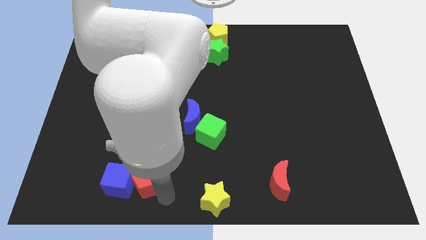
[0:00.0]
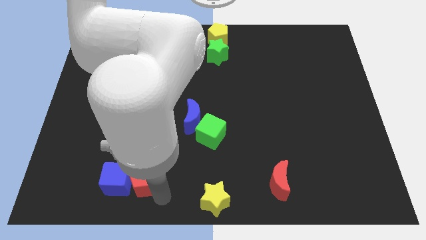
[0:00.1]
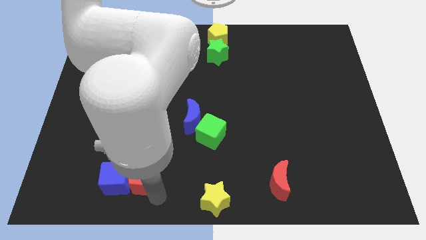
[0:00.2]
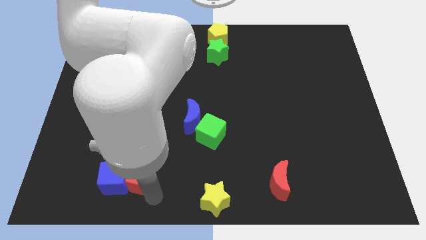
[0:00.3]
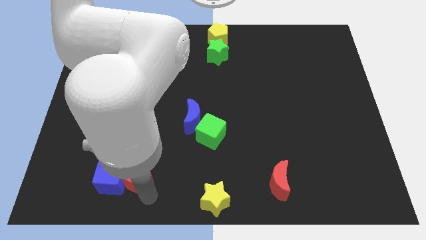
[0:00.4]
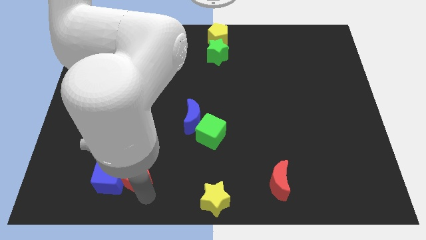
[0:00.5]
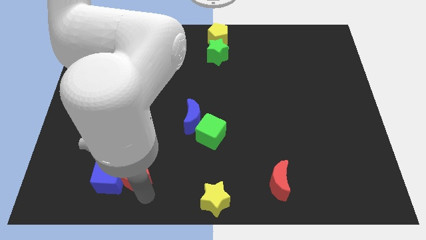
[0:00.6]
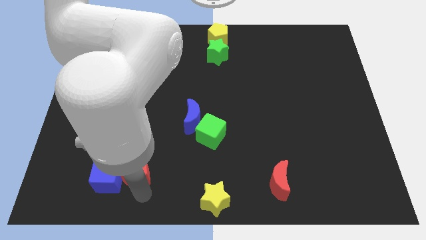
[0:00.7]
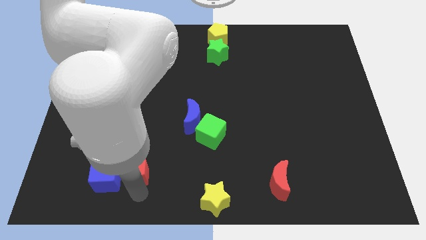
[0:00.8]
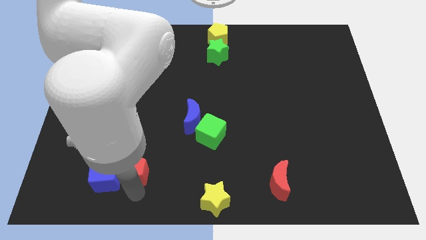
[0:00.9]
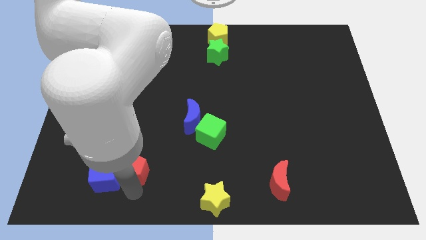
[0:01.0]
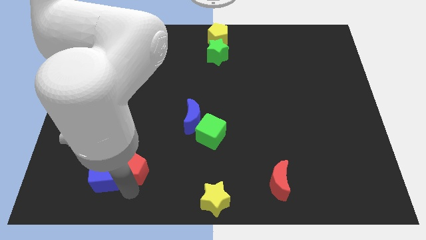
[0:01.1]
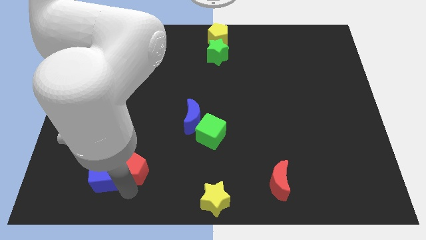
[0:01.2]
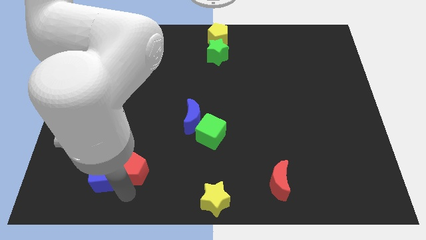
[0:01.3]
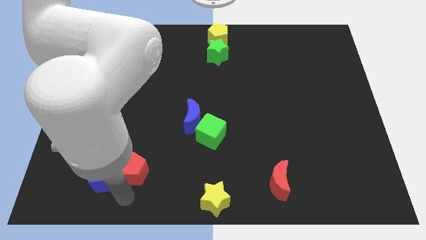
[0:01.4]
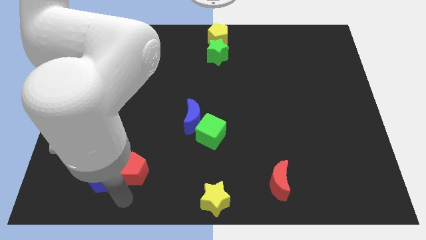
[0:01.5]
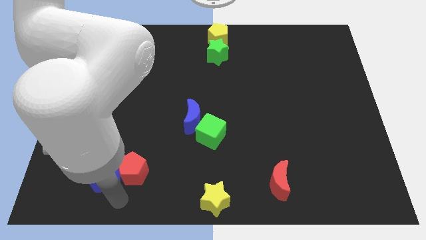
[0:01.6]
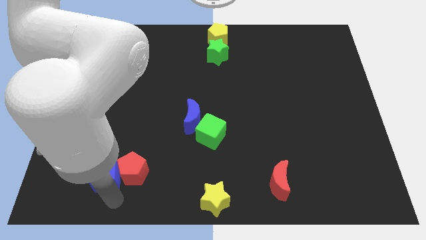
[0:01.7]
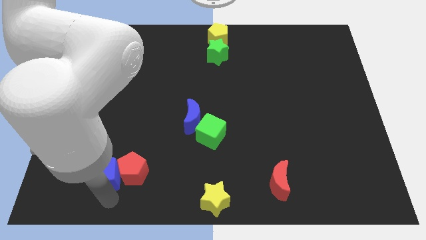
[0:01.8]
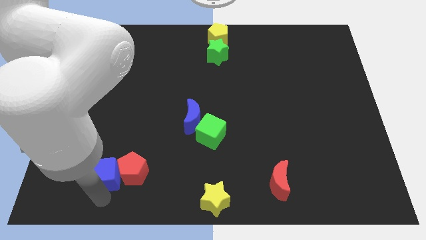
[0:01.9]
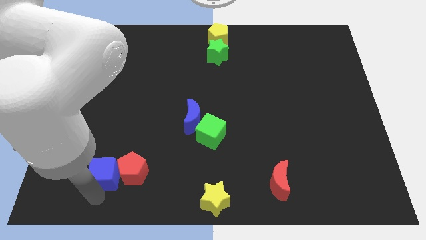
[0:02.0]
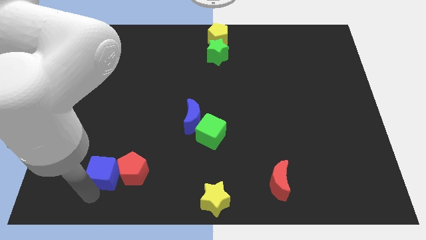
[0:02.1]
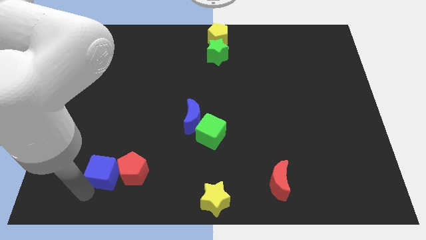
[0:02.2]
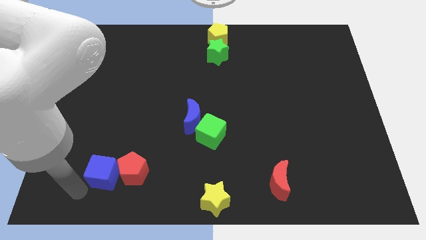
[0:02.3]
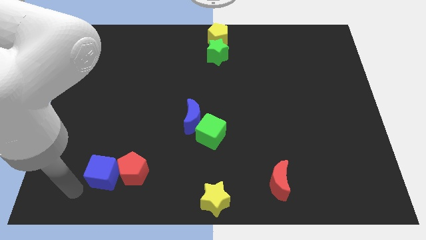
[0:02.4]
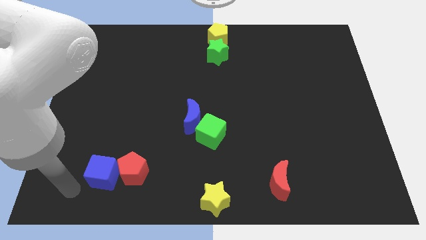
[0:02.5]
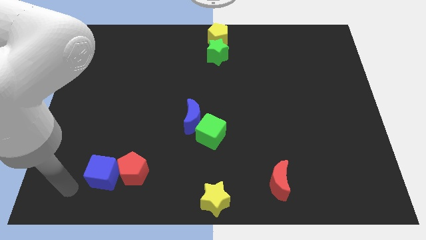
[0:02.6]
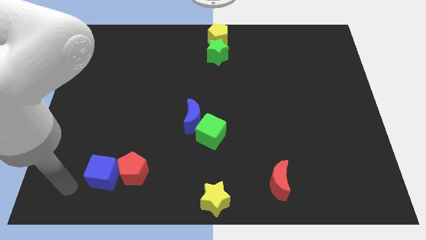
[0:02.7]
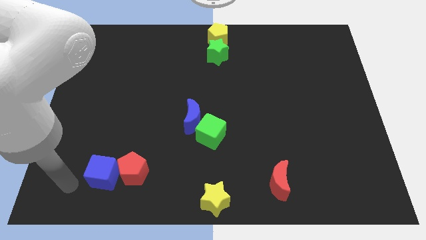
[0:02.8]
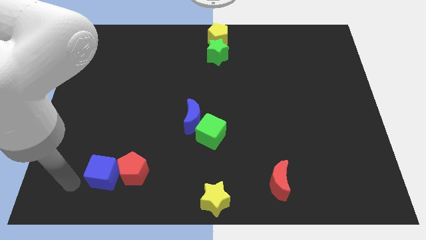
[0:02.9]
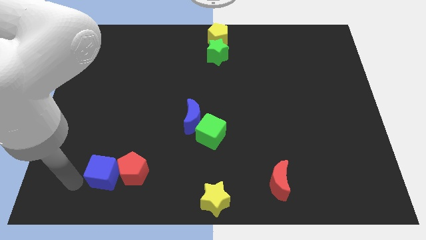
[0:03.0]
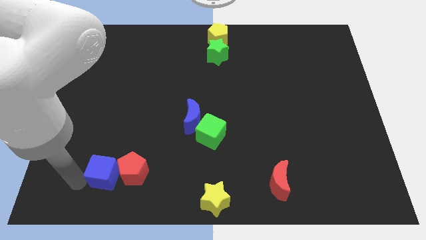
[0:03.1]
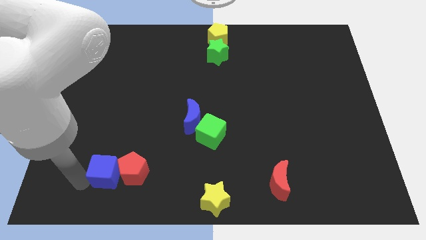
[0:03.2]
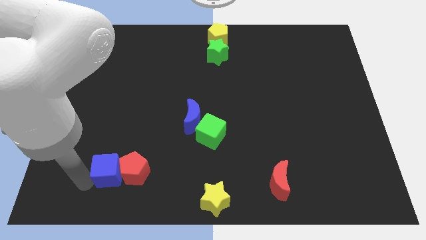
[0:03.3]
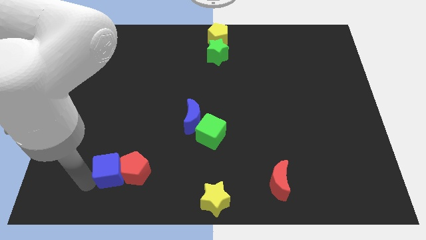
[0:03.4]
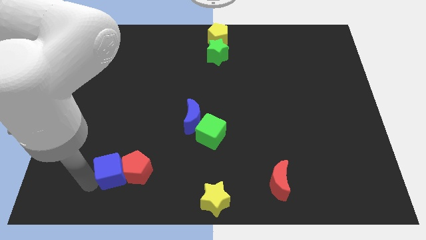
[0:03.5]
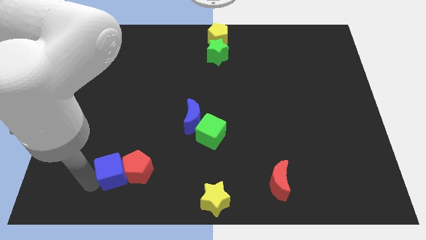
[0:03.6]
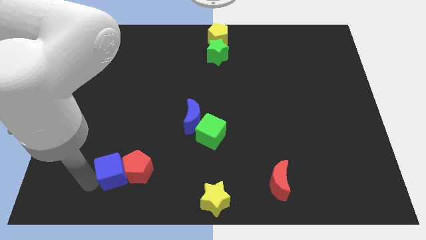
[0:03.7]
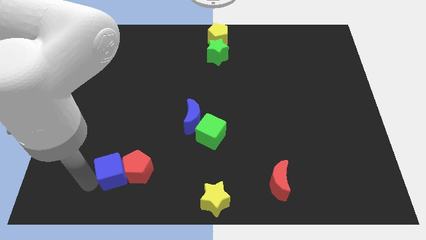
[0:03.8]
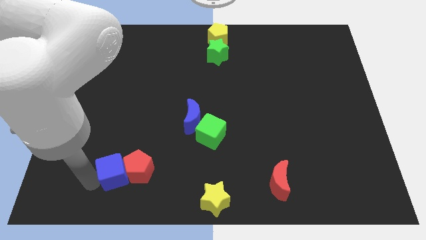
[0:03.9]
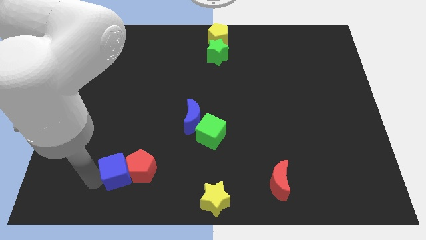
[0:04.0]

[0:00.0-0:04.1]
push the red pentagon and blue cube together with each other

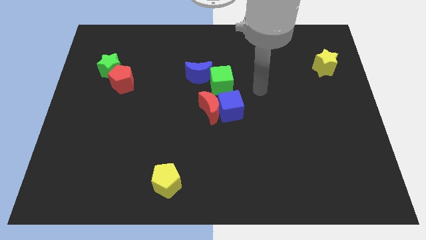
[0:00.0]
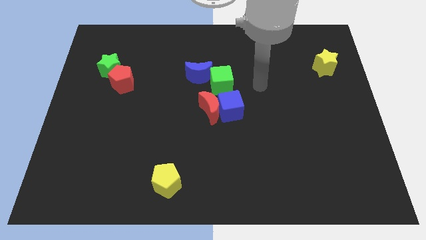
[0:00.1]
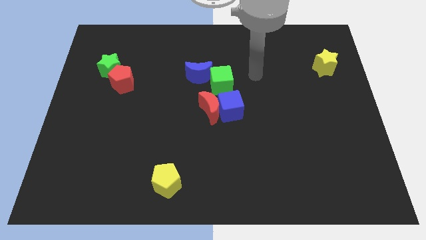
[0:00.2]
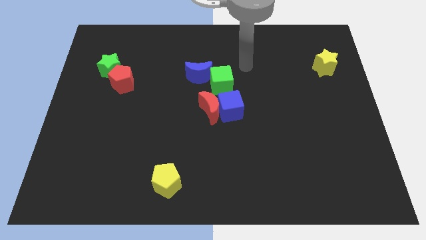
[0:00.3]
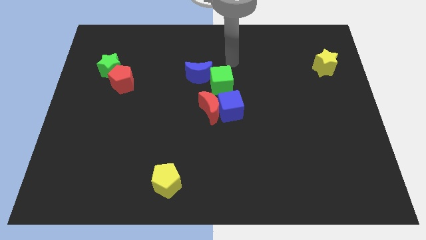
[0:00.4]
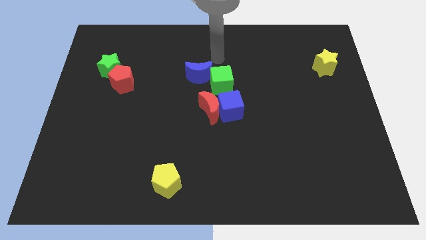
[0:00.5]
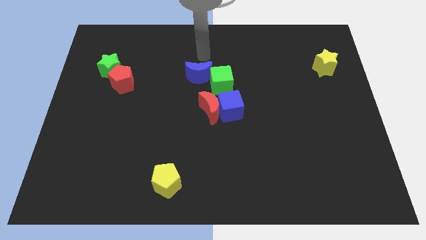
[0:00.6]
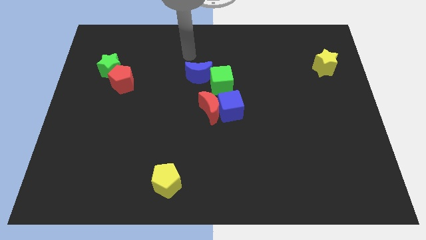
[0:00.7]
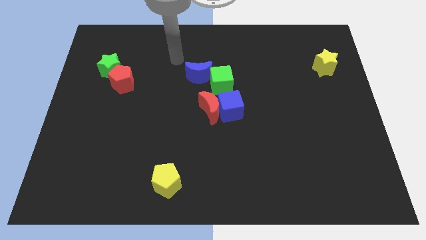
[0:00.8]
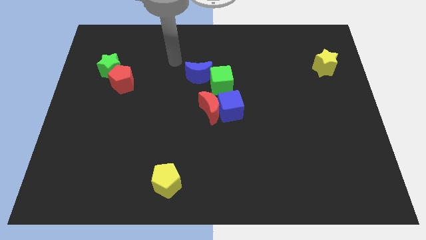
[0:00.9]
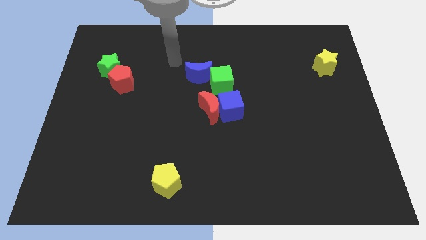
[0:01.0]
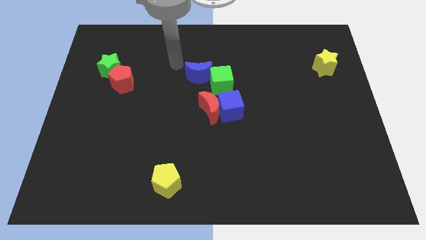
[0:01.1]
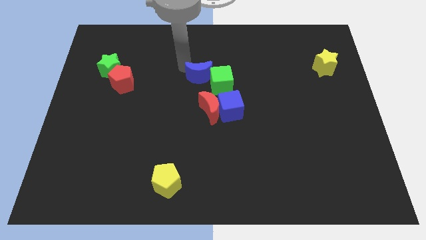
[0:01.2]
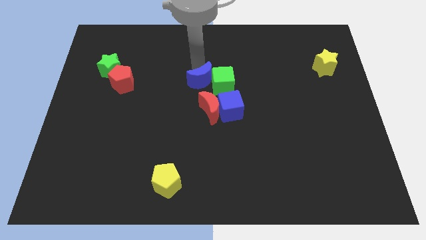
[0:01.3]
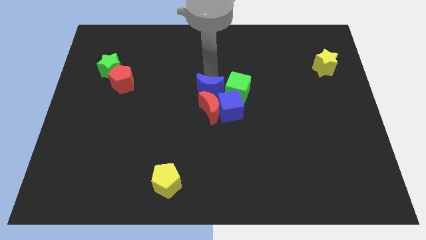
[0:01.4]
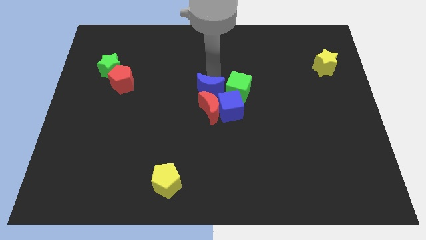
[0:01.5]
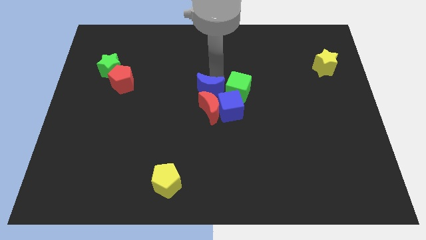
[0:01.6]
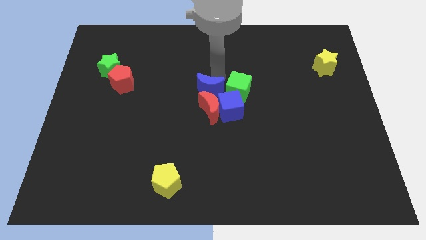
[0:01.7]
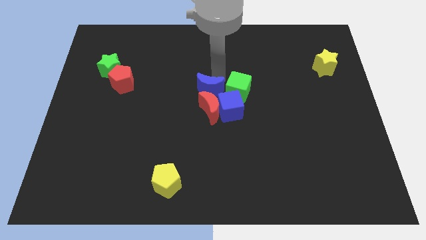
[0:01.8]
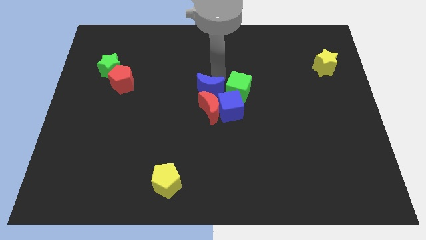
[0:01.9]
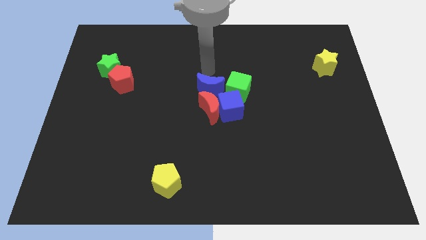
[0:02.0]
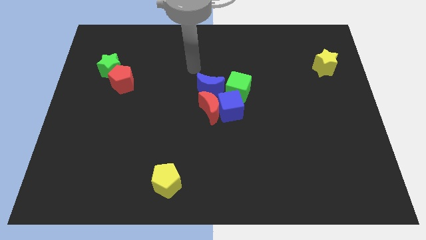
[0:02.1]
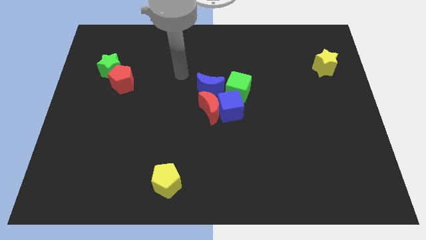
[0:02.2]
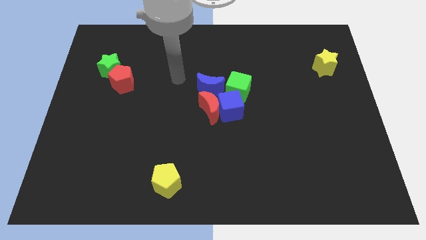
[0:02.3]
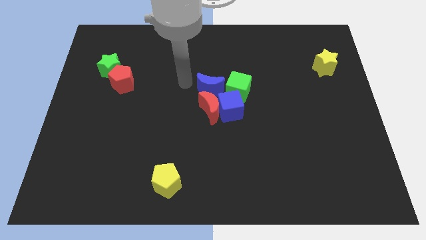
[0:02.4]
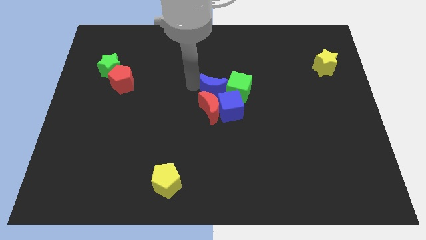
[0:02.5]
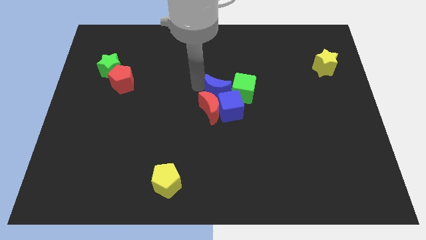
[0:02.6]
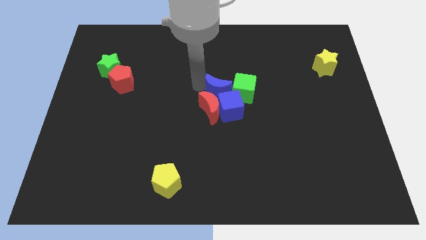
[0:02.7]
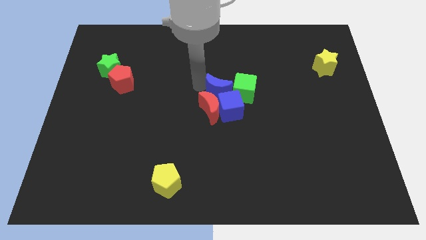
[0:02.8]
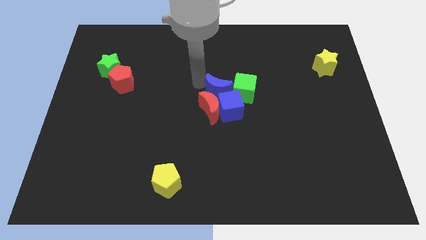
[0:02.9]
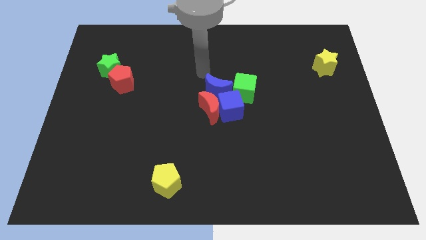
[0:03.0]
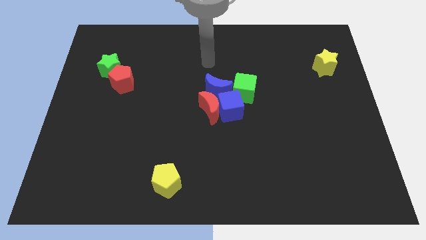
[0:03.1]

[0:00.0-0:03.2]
push the blue crescent along with green cube towards the right

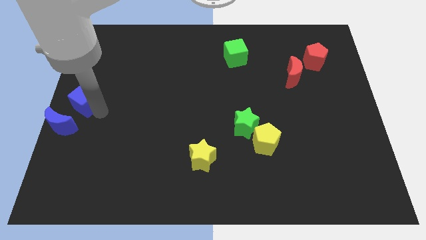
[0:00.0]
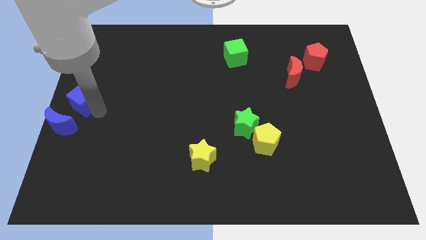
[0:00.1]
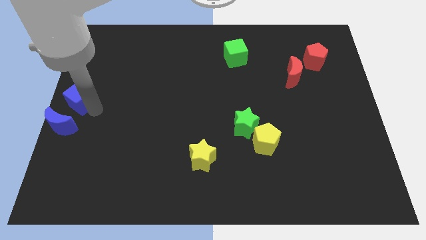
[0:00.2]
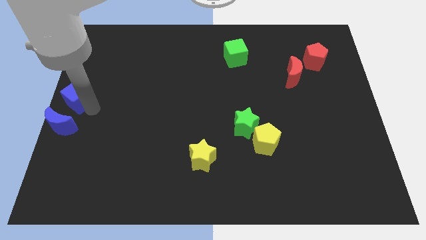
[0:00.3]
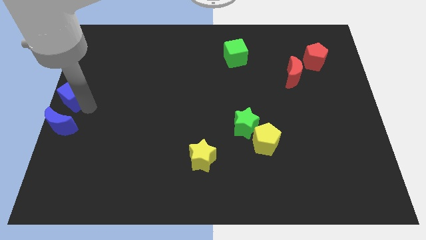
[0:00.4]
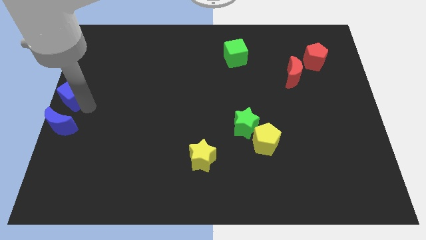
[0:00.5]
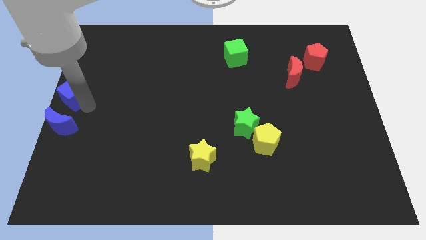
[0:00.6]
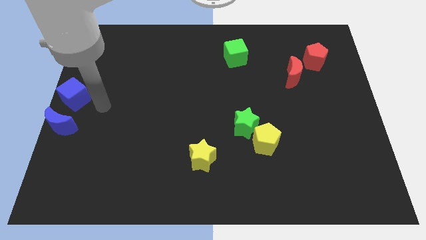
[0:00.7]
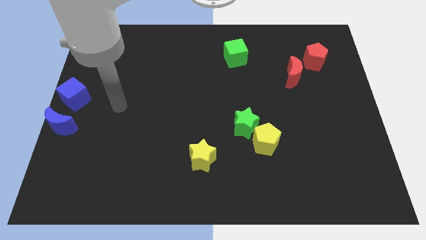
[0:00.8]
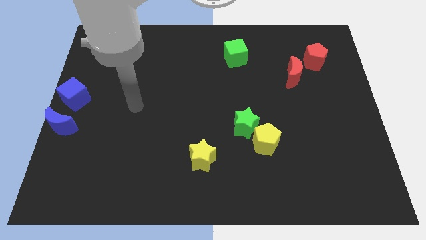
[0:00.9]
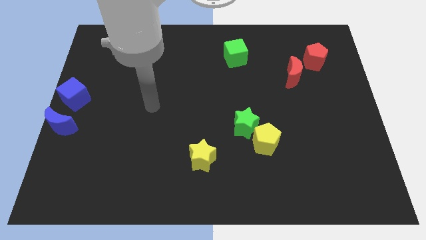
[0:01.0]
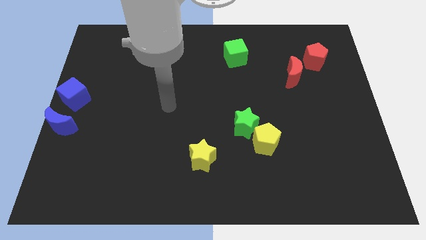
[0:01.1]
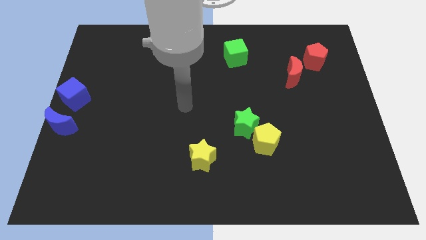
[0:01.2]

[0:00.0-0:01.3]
push the blue cube to the left center of the board

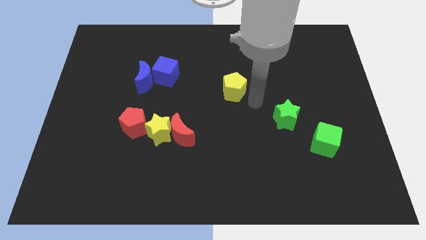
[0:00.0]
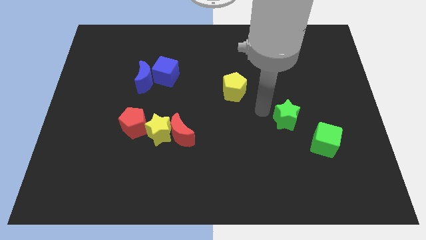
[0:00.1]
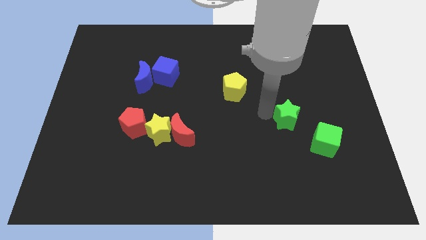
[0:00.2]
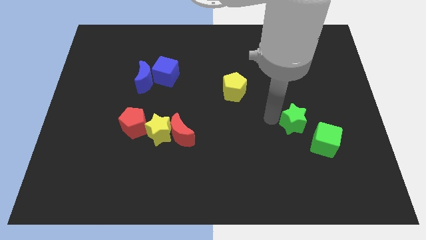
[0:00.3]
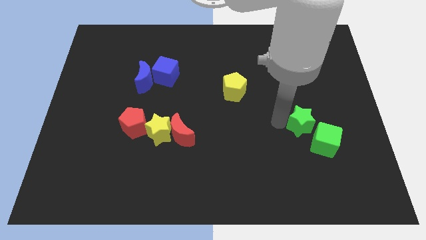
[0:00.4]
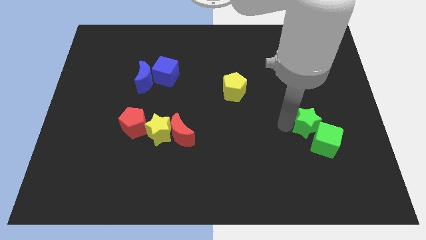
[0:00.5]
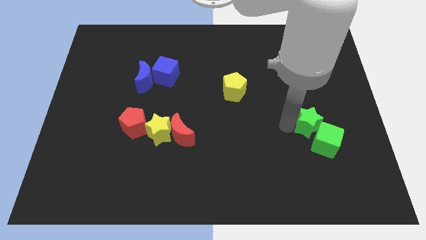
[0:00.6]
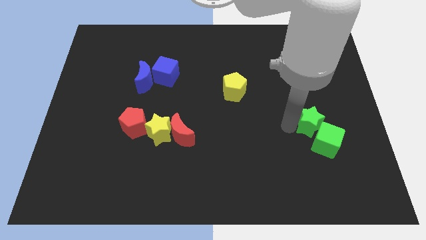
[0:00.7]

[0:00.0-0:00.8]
push the green star into the green cube
